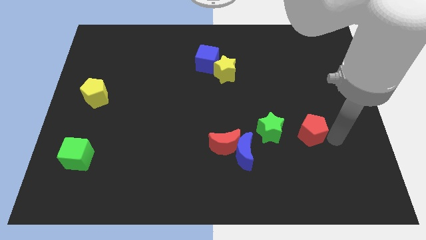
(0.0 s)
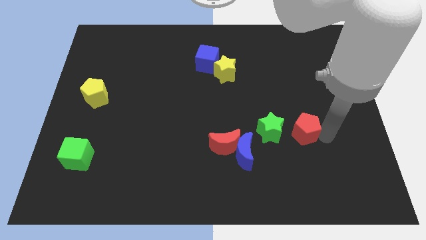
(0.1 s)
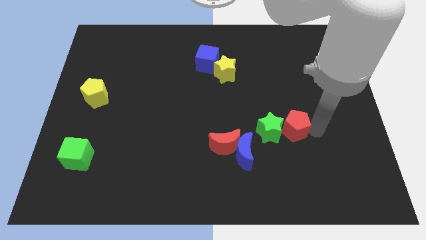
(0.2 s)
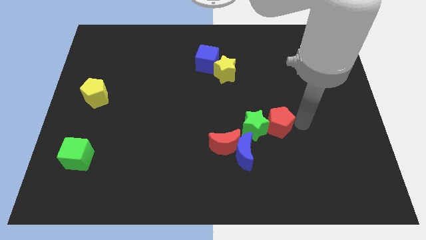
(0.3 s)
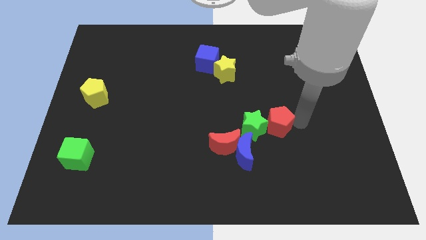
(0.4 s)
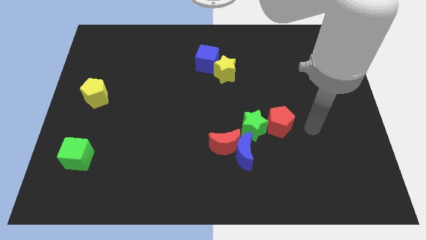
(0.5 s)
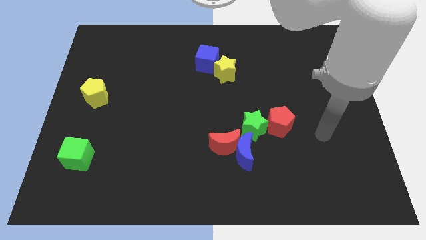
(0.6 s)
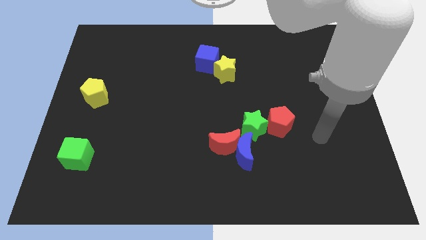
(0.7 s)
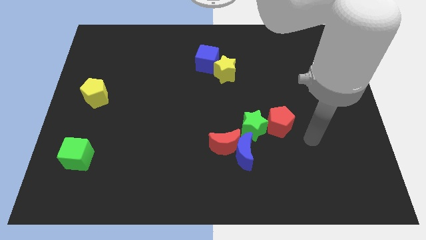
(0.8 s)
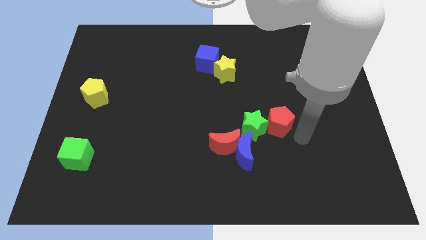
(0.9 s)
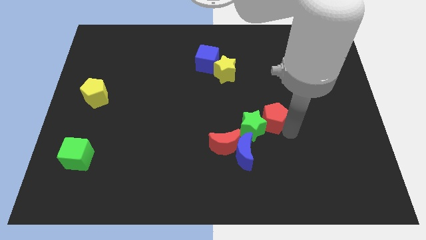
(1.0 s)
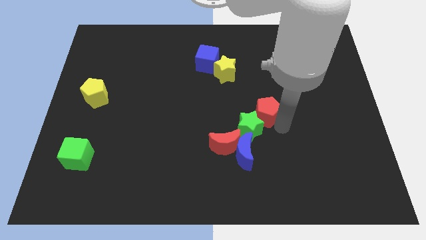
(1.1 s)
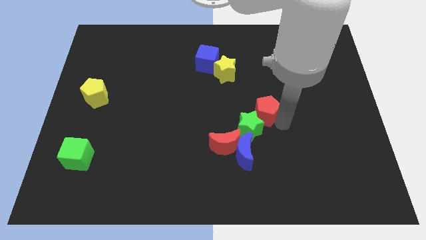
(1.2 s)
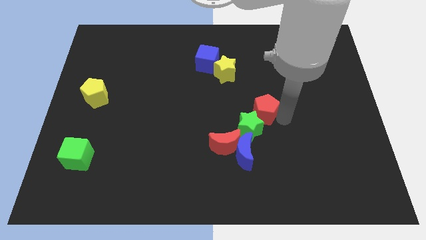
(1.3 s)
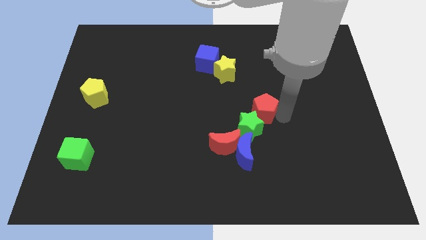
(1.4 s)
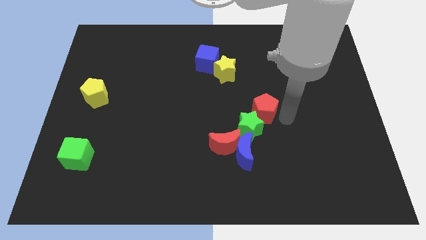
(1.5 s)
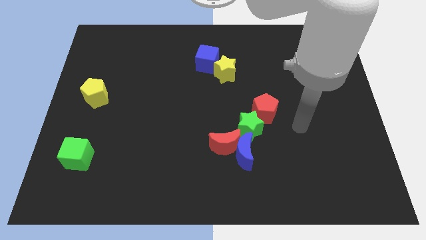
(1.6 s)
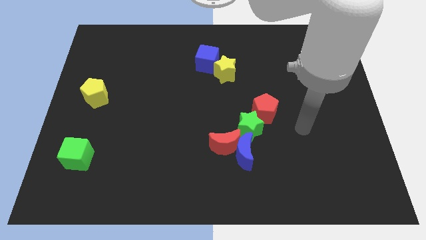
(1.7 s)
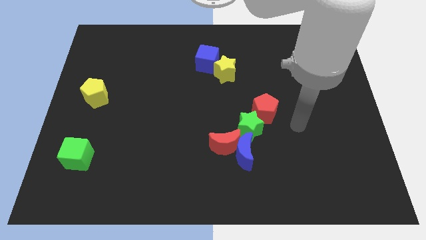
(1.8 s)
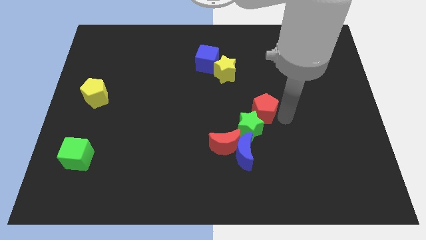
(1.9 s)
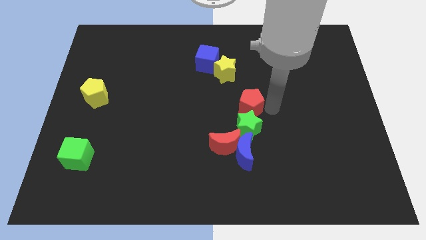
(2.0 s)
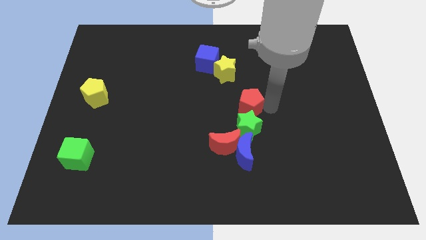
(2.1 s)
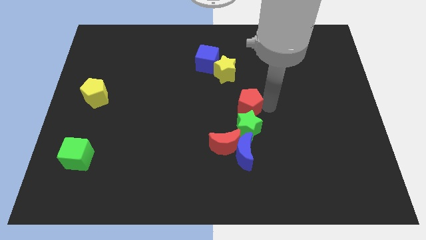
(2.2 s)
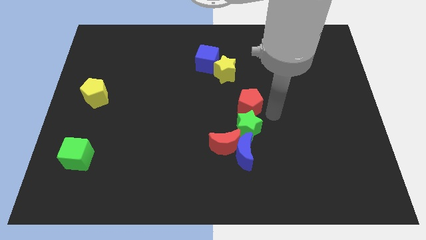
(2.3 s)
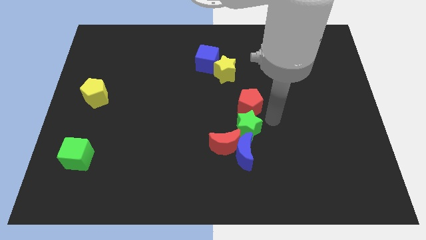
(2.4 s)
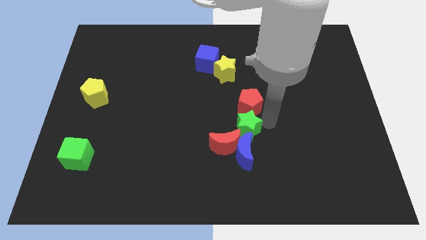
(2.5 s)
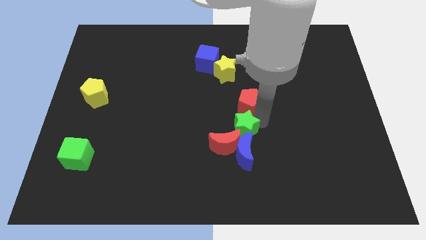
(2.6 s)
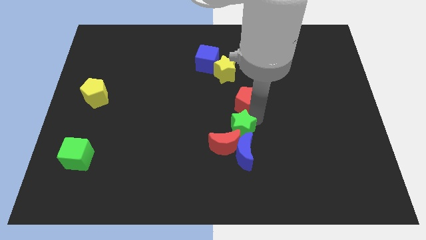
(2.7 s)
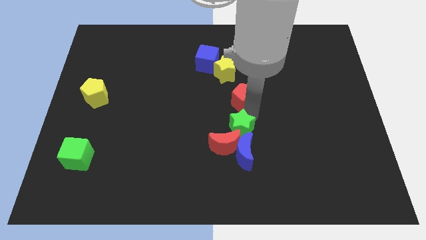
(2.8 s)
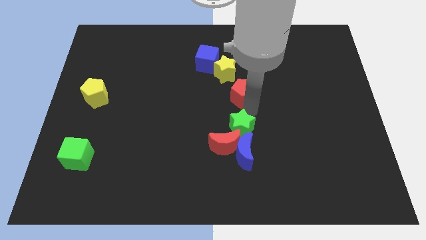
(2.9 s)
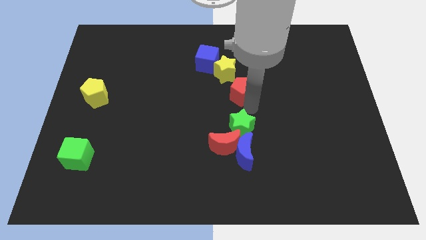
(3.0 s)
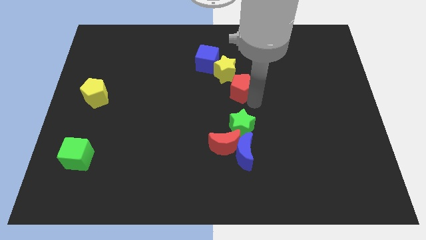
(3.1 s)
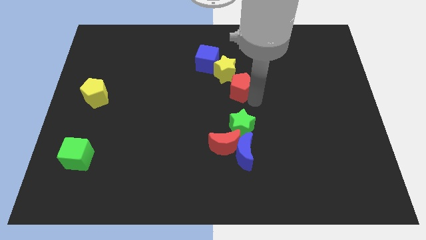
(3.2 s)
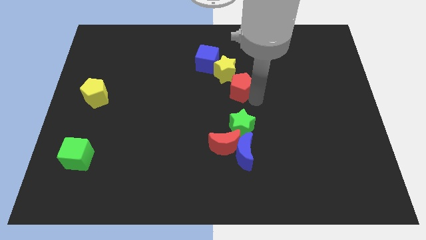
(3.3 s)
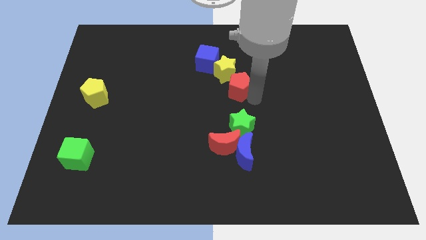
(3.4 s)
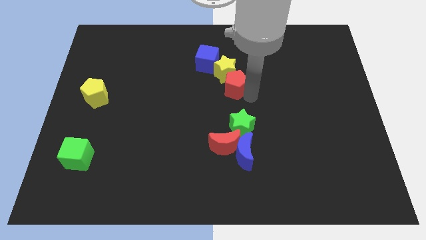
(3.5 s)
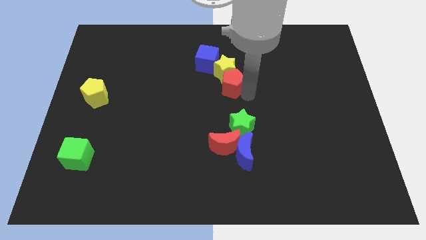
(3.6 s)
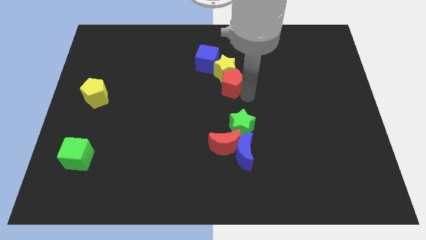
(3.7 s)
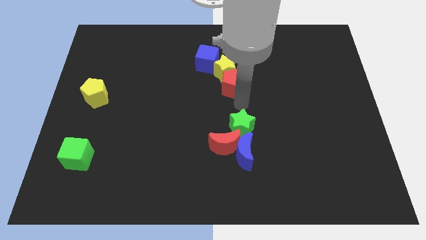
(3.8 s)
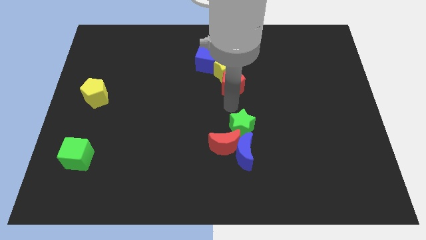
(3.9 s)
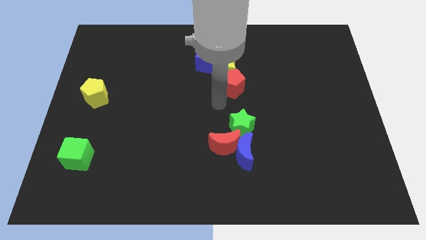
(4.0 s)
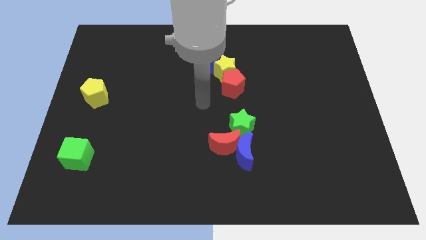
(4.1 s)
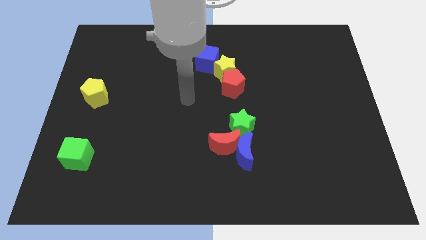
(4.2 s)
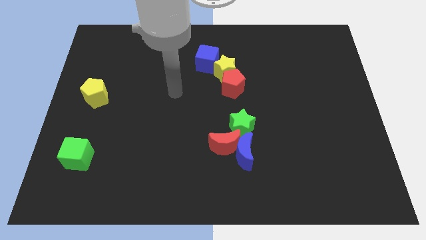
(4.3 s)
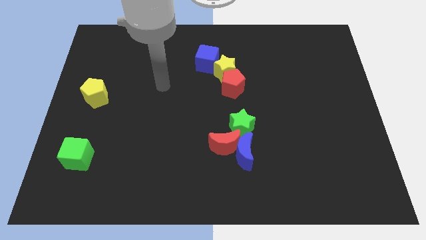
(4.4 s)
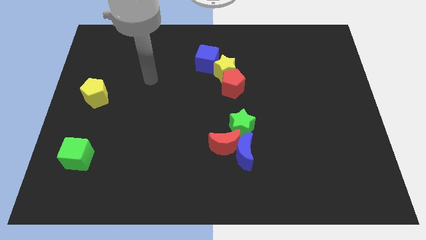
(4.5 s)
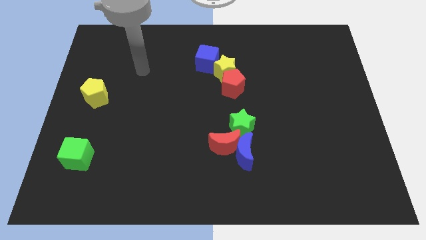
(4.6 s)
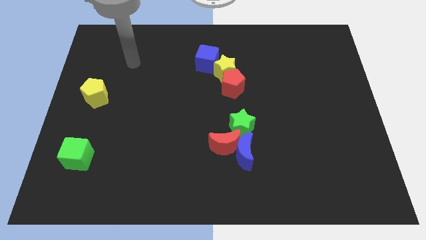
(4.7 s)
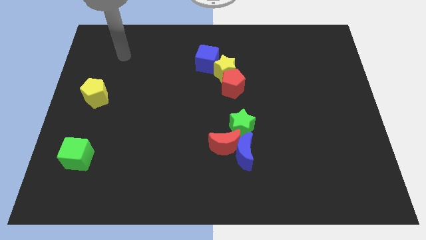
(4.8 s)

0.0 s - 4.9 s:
place the red pentagon below the yellow star

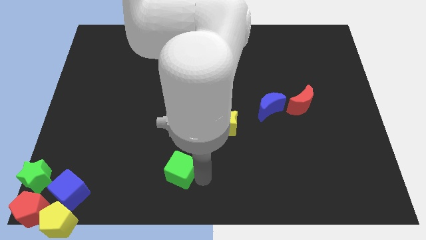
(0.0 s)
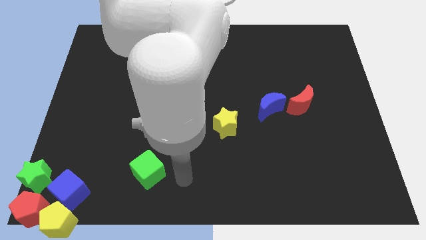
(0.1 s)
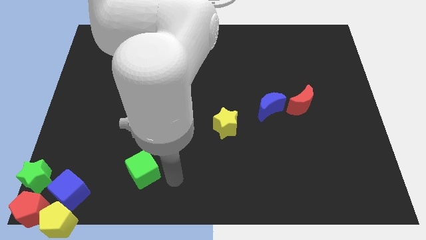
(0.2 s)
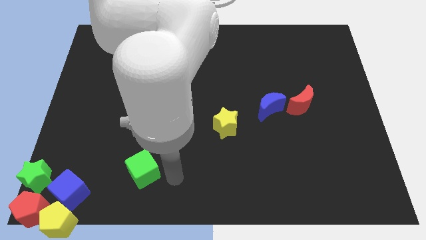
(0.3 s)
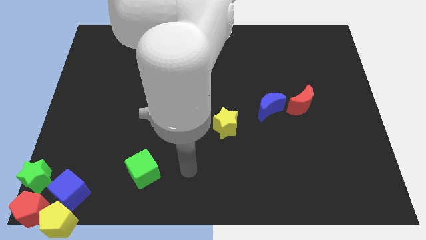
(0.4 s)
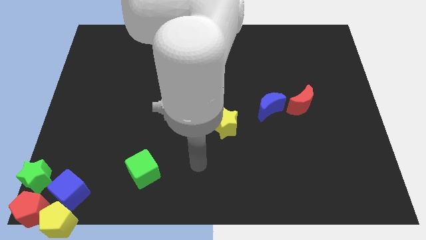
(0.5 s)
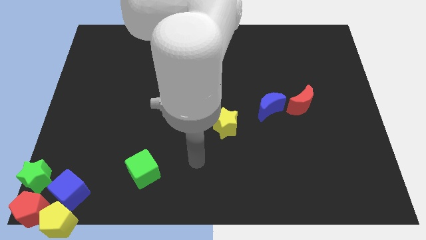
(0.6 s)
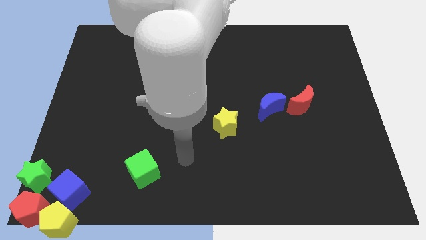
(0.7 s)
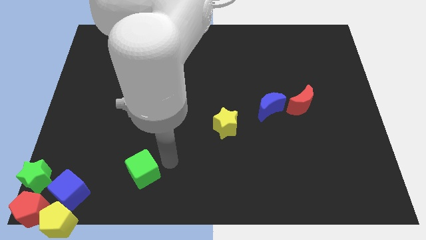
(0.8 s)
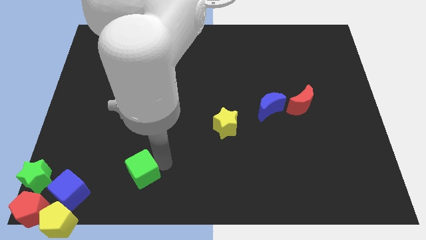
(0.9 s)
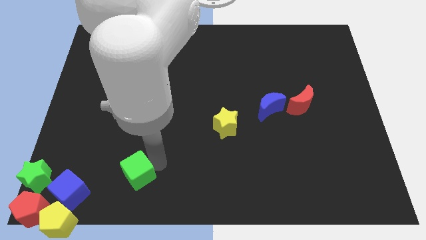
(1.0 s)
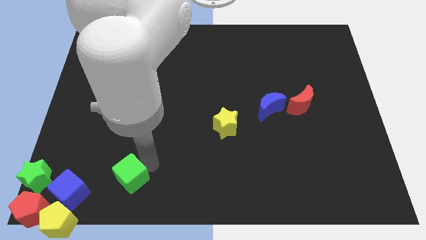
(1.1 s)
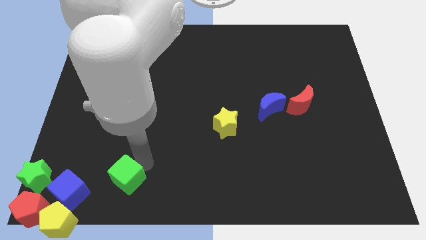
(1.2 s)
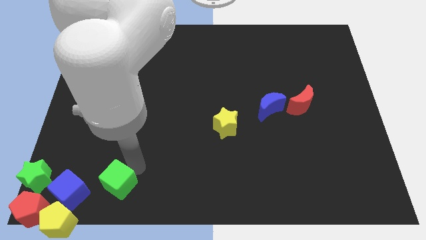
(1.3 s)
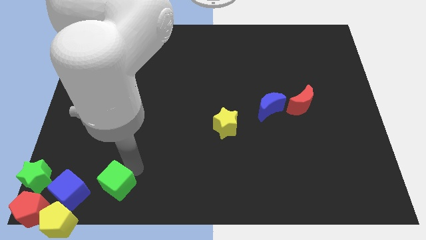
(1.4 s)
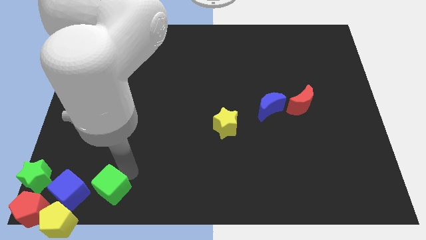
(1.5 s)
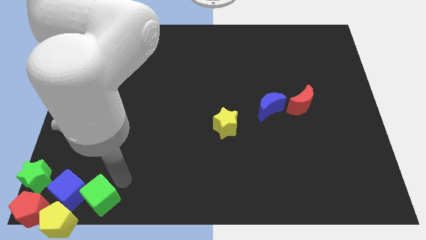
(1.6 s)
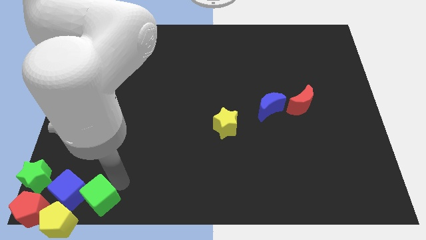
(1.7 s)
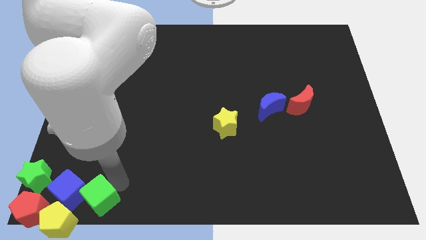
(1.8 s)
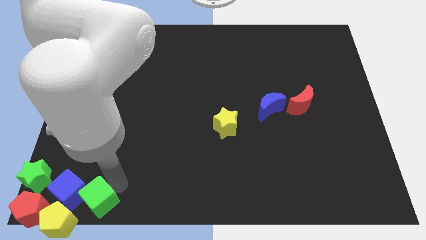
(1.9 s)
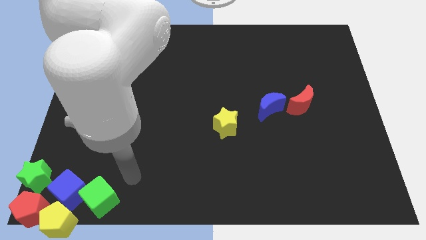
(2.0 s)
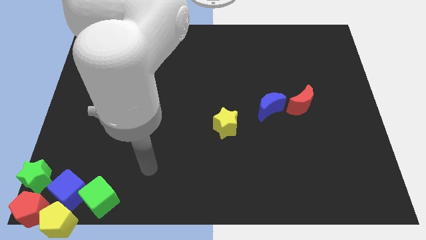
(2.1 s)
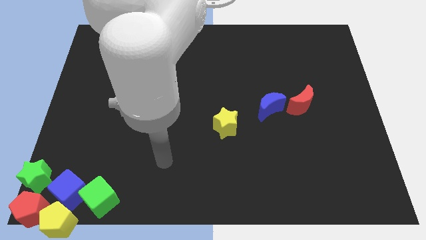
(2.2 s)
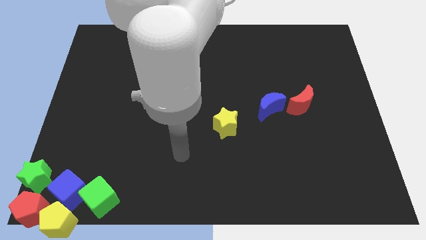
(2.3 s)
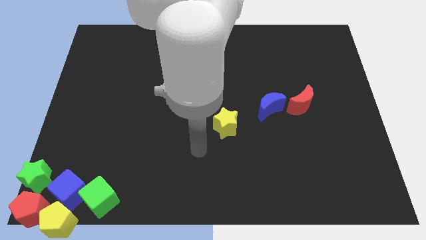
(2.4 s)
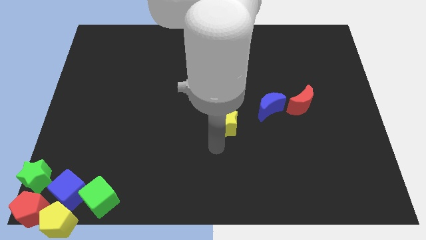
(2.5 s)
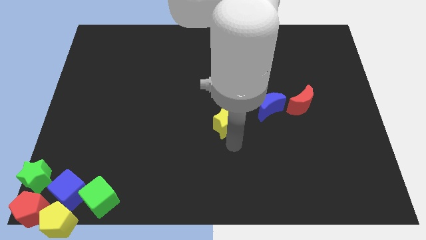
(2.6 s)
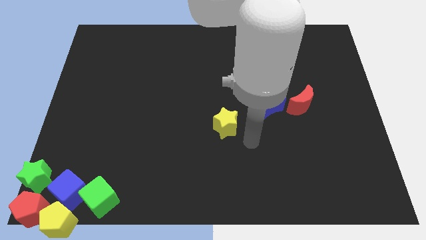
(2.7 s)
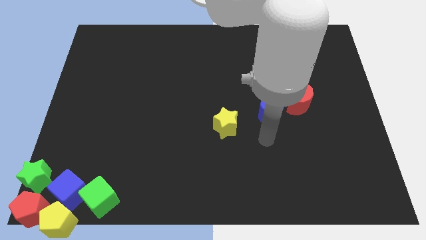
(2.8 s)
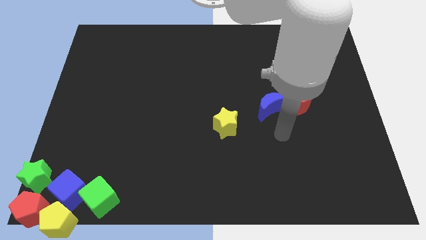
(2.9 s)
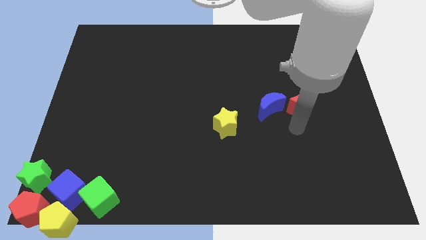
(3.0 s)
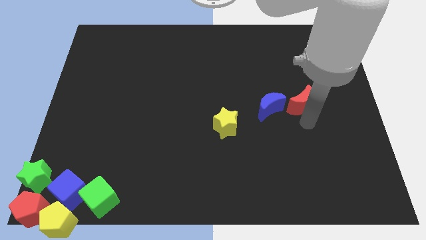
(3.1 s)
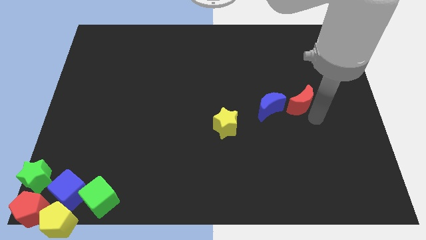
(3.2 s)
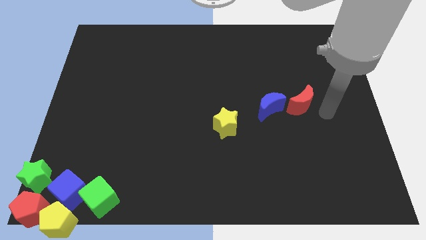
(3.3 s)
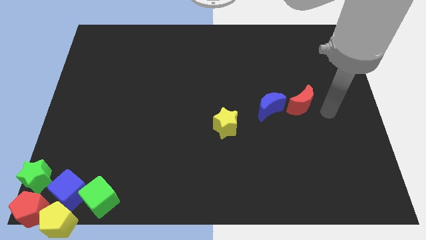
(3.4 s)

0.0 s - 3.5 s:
place the green cube towards the right side of the blue cube

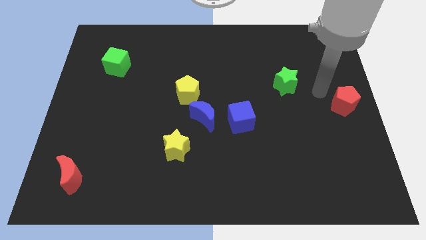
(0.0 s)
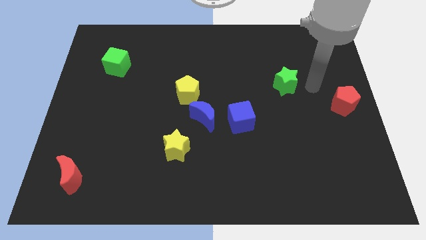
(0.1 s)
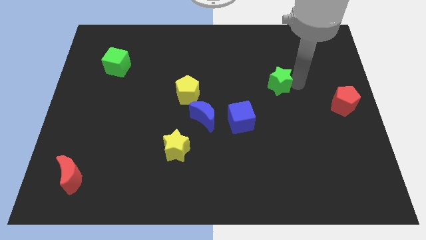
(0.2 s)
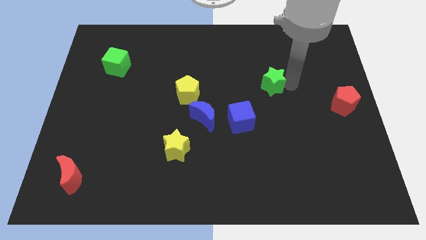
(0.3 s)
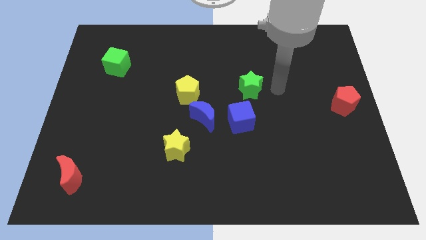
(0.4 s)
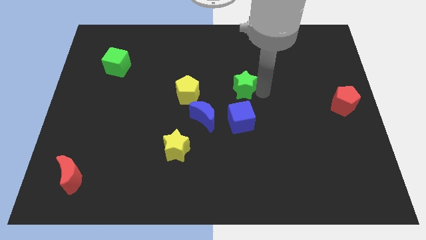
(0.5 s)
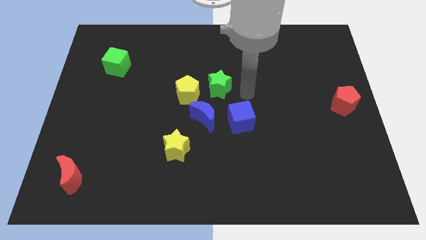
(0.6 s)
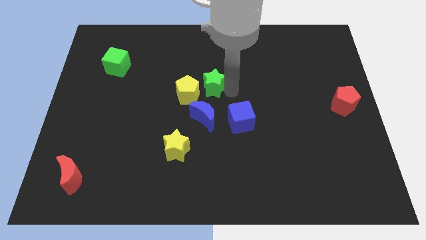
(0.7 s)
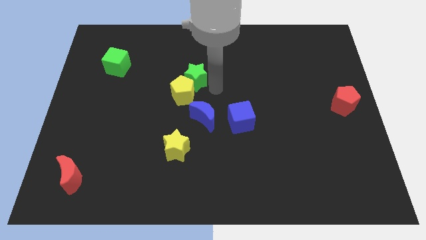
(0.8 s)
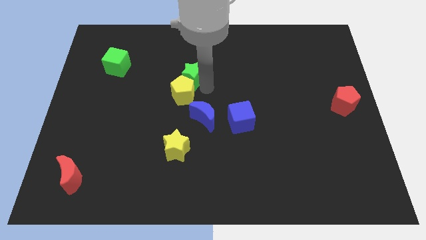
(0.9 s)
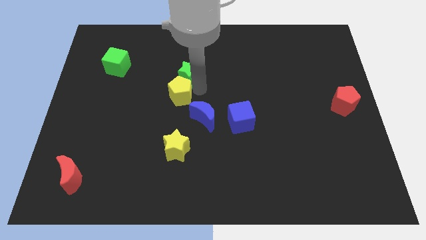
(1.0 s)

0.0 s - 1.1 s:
place green star near yellow pentagon
